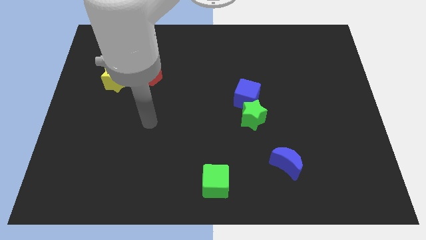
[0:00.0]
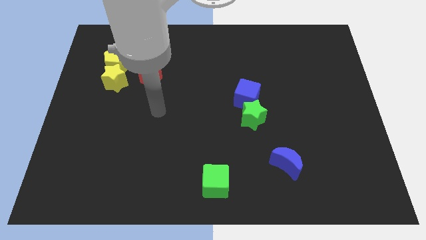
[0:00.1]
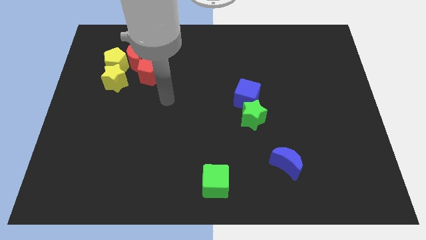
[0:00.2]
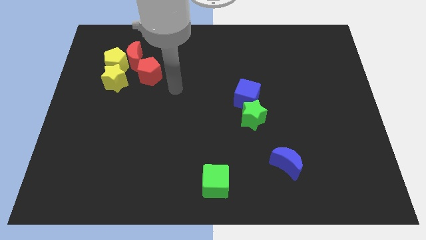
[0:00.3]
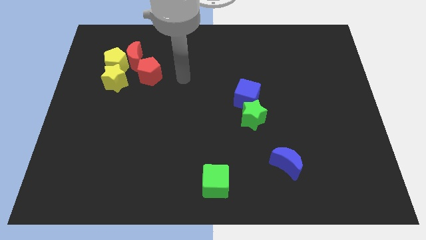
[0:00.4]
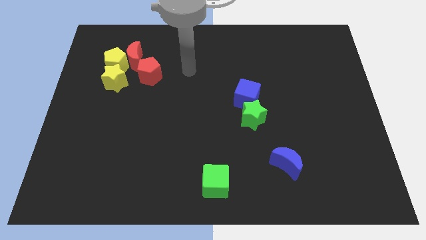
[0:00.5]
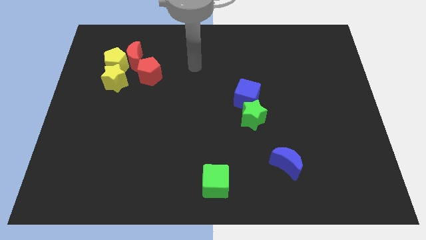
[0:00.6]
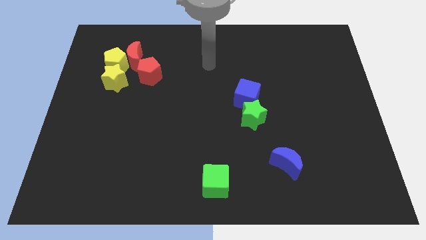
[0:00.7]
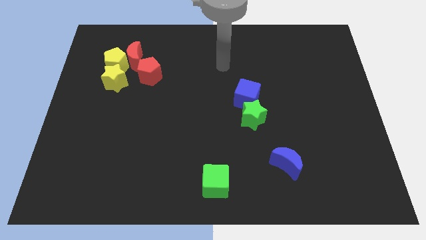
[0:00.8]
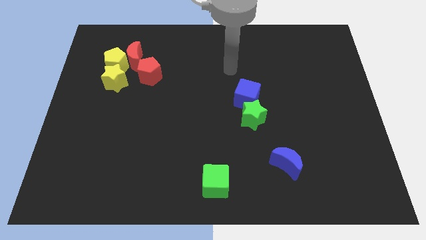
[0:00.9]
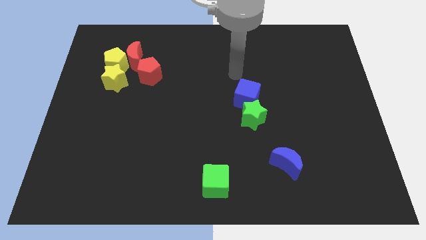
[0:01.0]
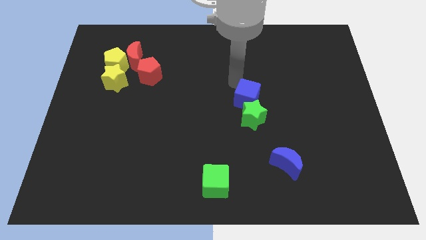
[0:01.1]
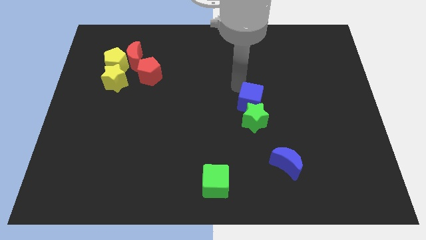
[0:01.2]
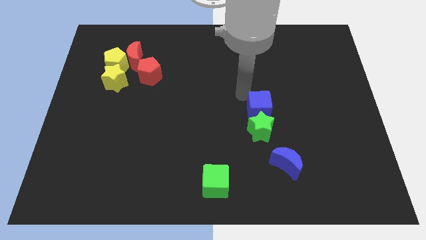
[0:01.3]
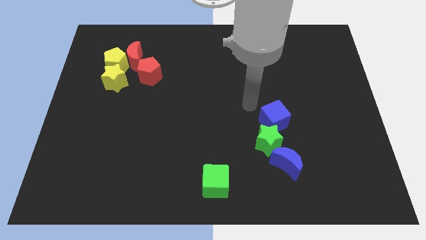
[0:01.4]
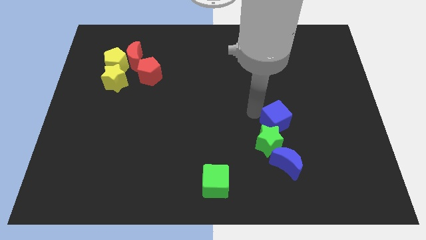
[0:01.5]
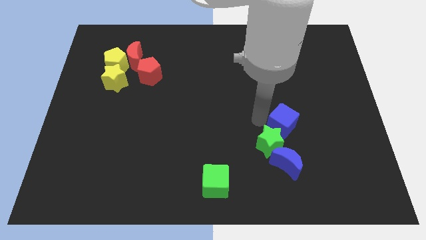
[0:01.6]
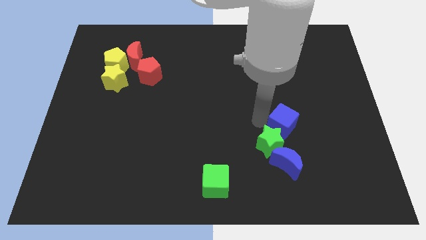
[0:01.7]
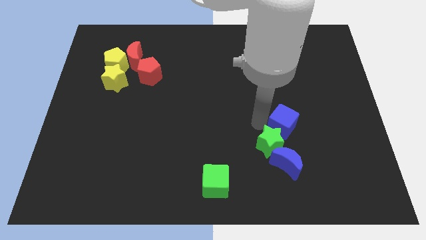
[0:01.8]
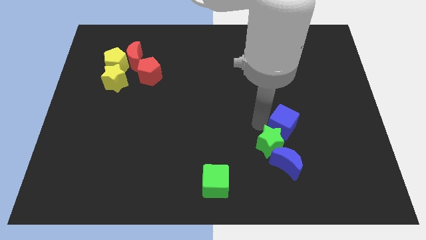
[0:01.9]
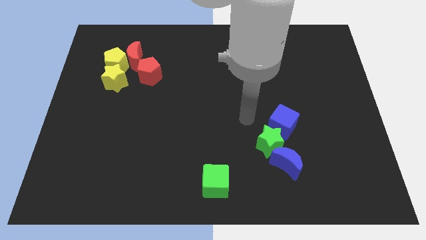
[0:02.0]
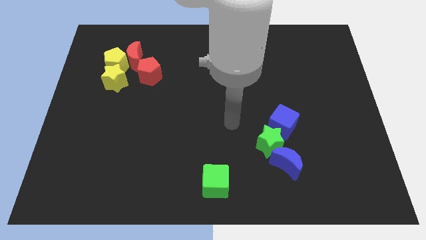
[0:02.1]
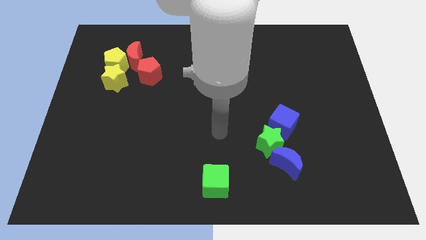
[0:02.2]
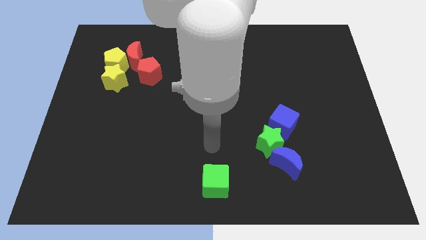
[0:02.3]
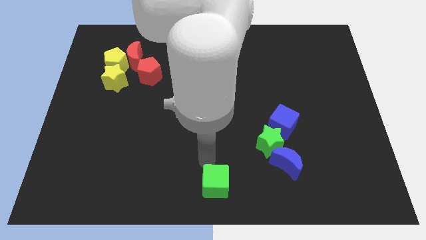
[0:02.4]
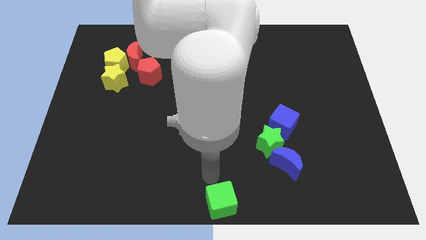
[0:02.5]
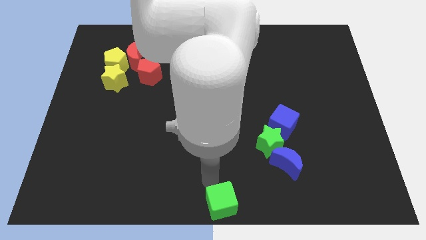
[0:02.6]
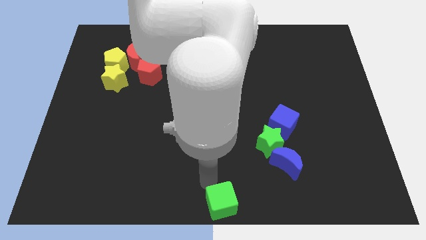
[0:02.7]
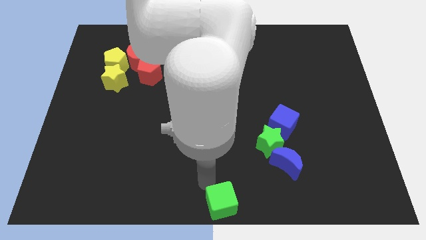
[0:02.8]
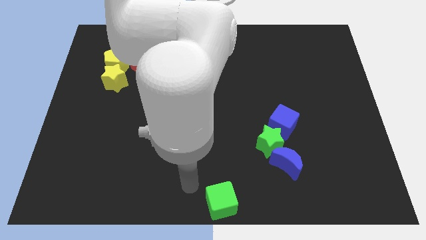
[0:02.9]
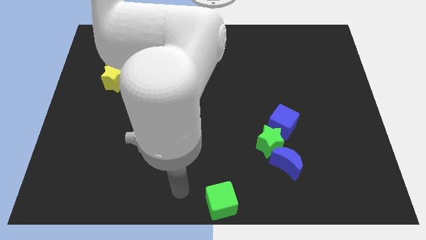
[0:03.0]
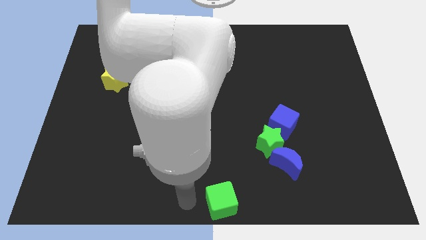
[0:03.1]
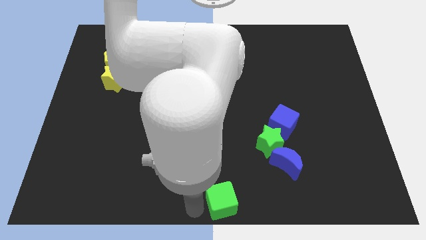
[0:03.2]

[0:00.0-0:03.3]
slightly push the green cube to bottom center

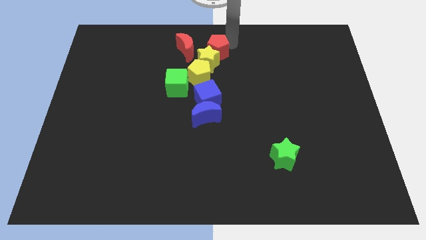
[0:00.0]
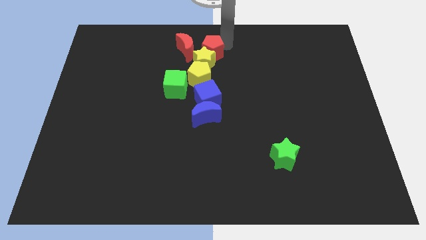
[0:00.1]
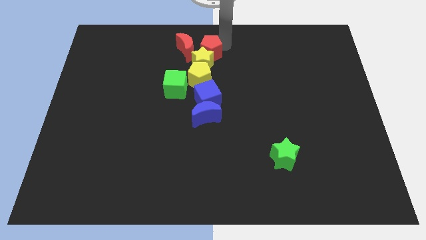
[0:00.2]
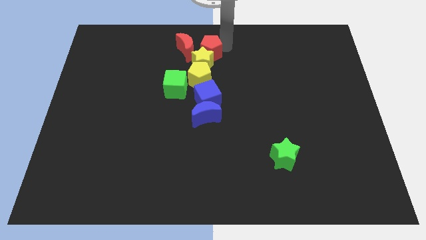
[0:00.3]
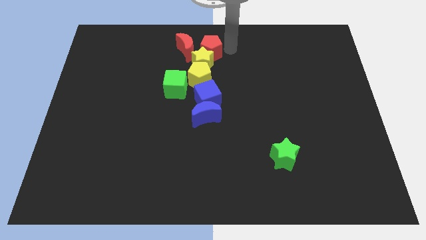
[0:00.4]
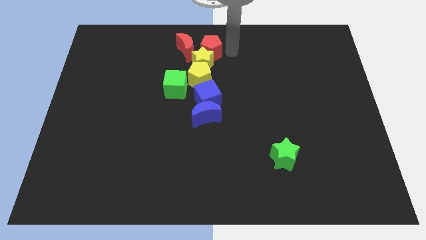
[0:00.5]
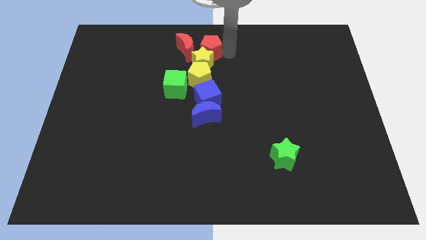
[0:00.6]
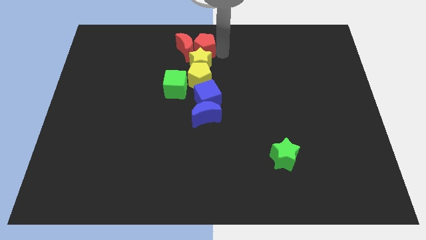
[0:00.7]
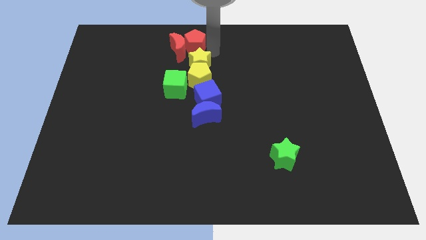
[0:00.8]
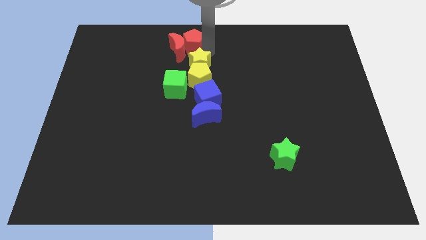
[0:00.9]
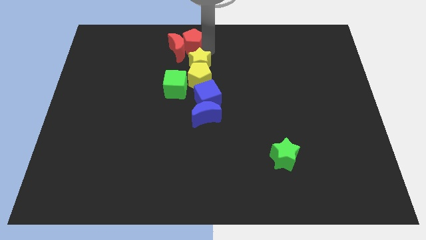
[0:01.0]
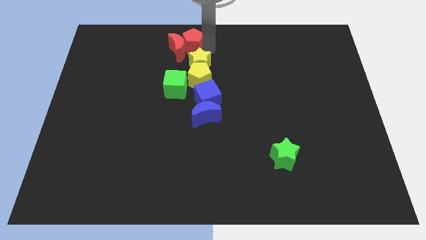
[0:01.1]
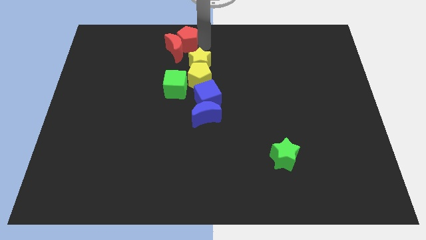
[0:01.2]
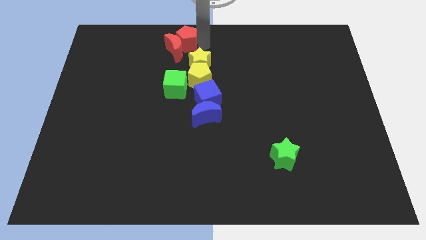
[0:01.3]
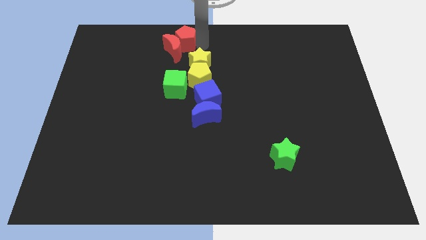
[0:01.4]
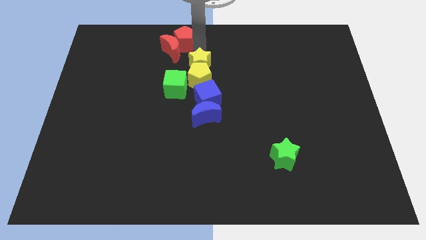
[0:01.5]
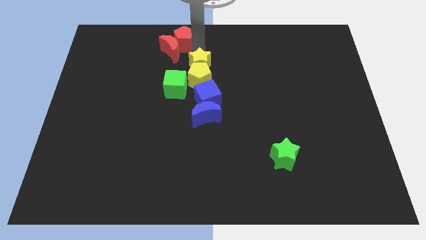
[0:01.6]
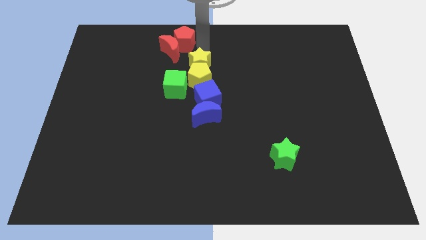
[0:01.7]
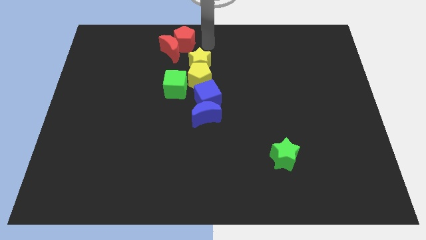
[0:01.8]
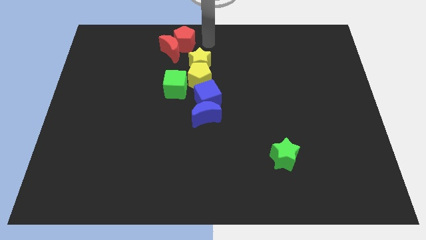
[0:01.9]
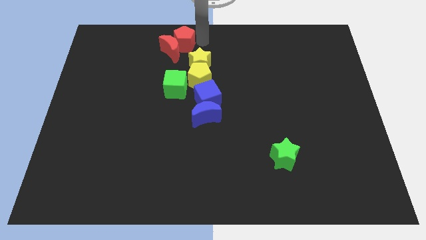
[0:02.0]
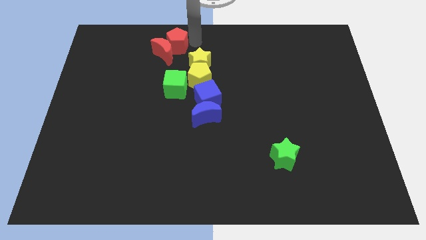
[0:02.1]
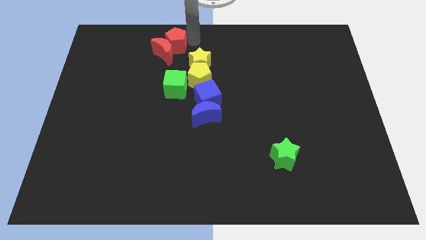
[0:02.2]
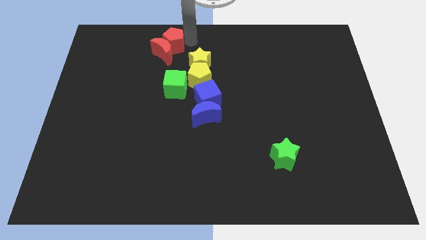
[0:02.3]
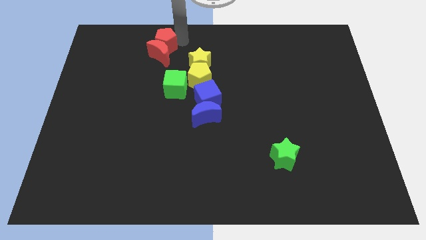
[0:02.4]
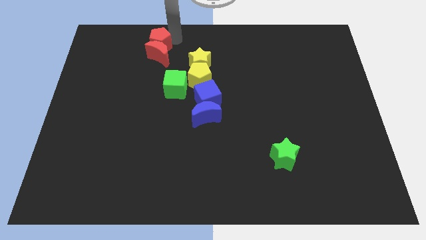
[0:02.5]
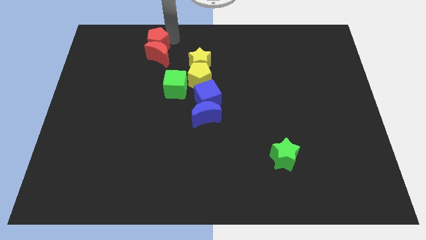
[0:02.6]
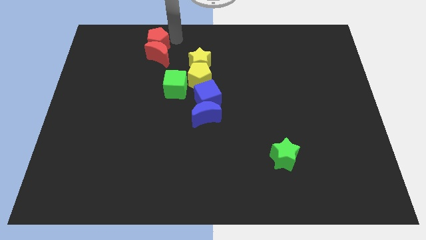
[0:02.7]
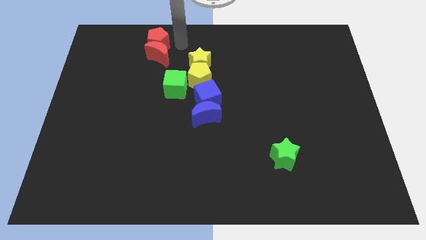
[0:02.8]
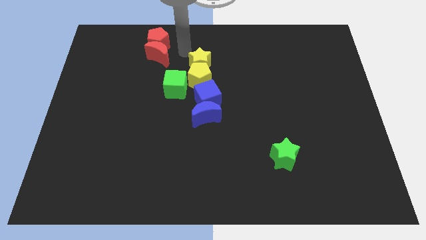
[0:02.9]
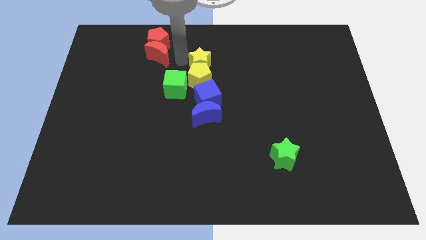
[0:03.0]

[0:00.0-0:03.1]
push red pentagon above red crescent

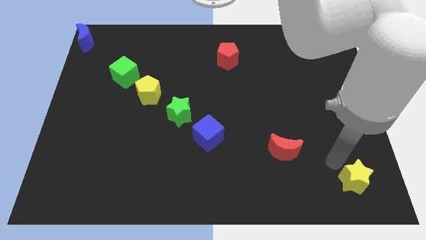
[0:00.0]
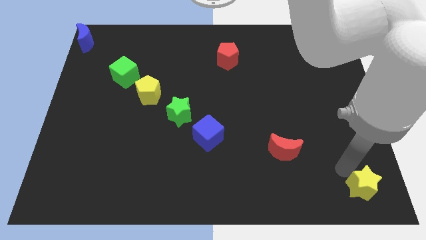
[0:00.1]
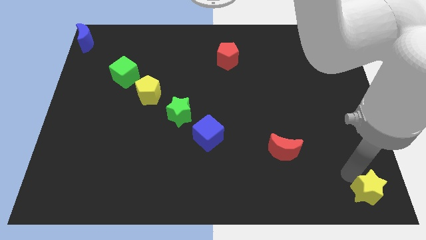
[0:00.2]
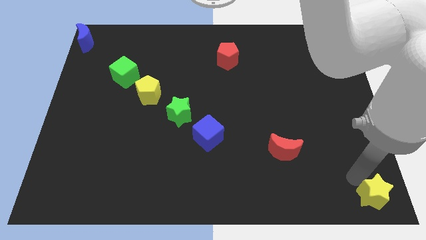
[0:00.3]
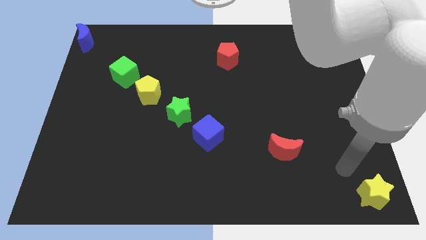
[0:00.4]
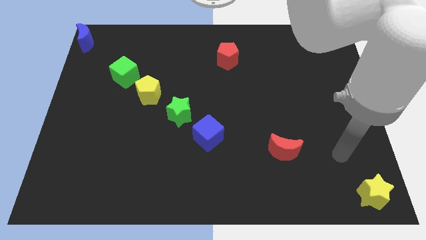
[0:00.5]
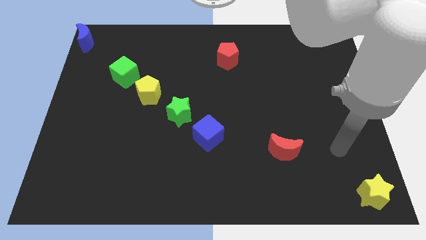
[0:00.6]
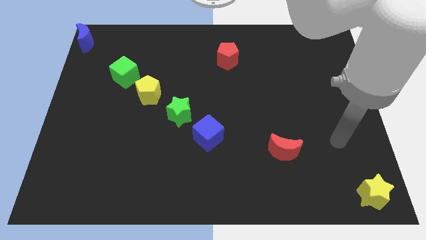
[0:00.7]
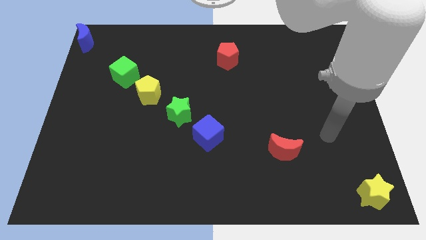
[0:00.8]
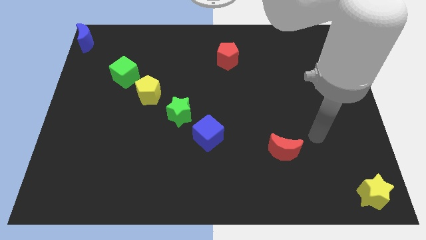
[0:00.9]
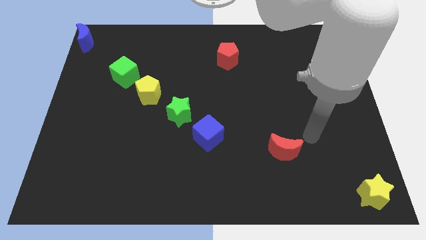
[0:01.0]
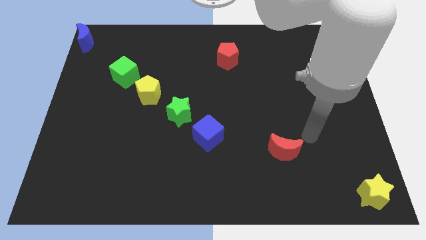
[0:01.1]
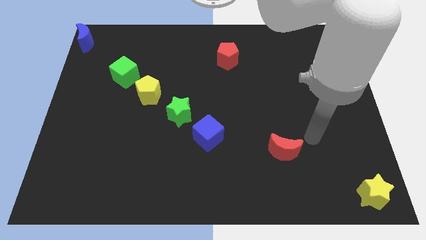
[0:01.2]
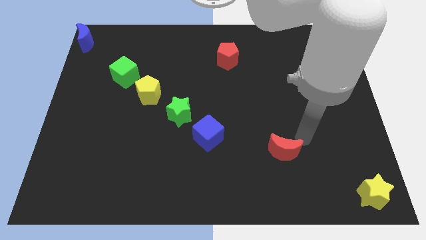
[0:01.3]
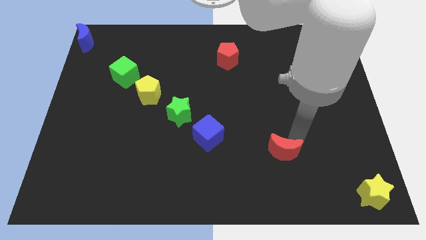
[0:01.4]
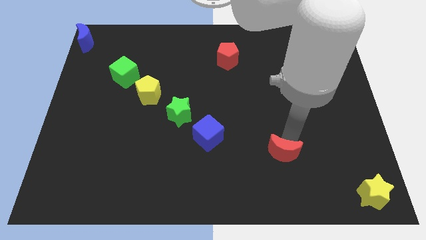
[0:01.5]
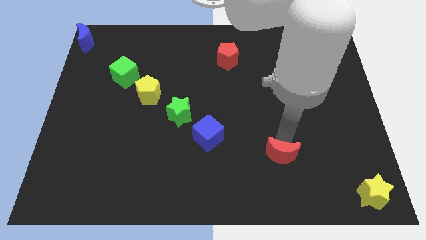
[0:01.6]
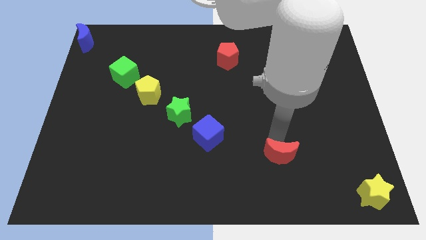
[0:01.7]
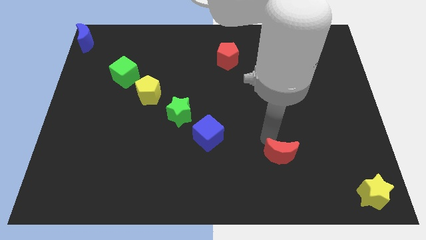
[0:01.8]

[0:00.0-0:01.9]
move the yellow star to bottom right corner of the board

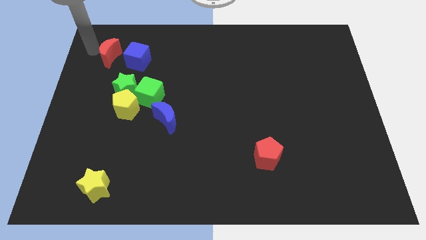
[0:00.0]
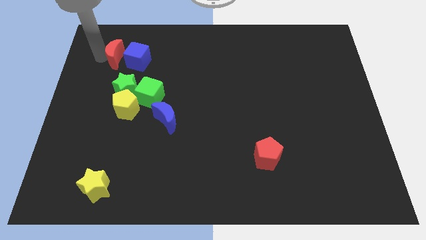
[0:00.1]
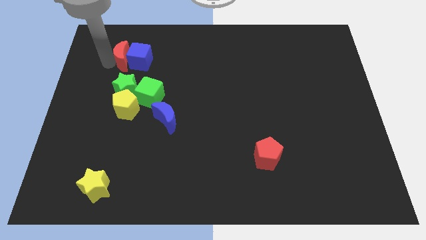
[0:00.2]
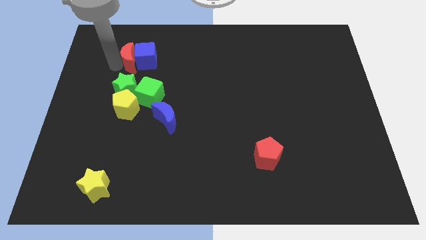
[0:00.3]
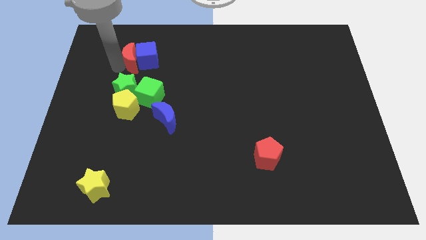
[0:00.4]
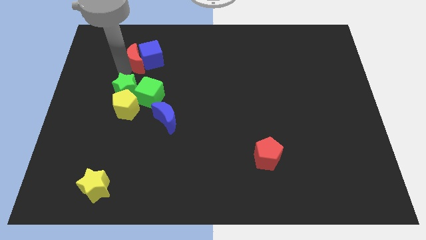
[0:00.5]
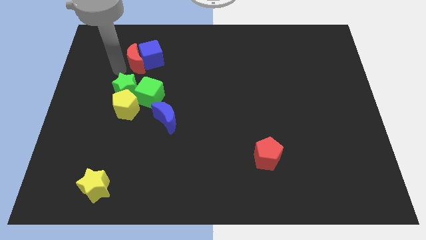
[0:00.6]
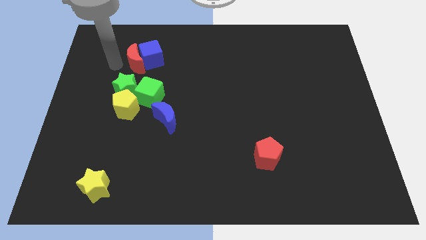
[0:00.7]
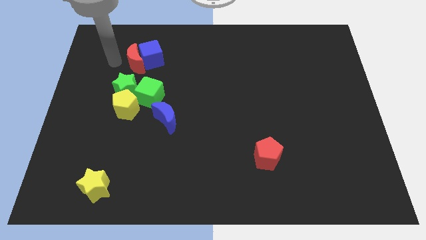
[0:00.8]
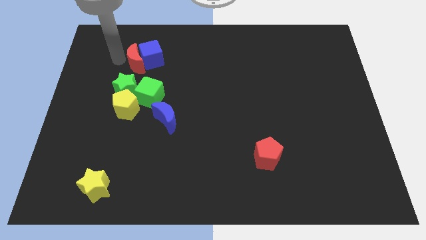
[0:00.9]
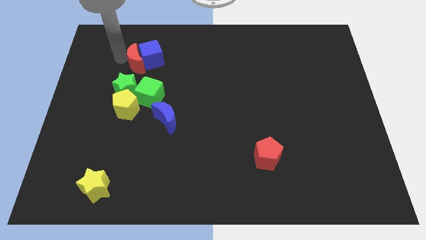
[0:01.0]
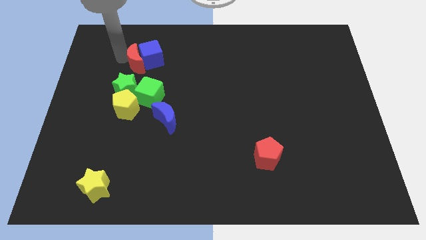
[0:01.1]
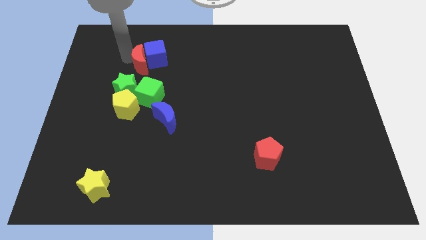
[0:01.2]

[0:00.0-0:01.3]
push red crescent along with the blue cube
